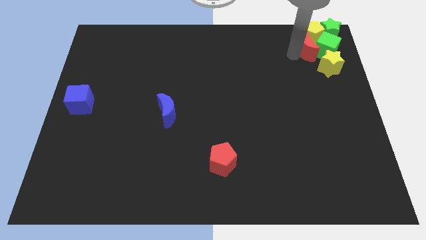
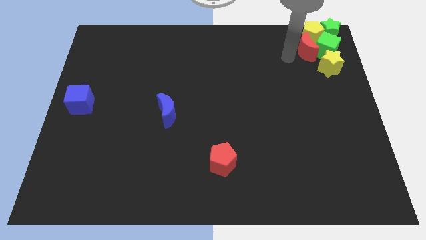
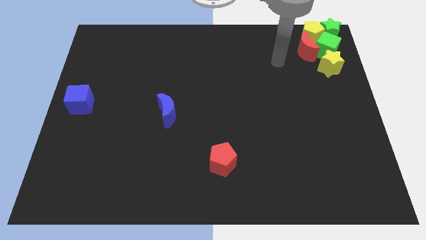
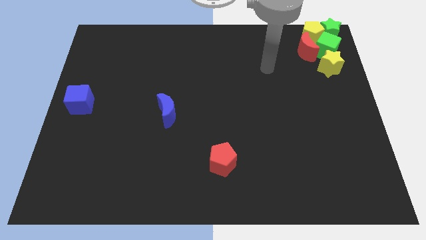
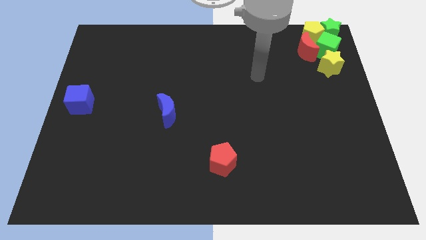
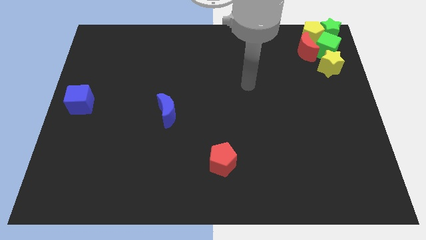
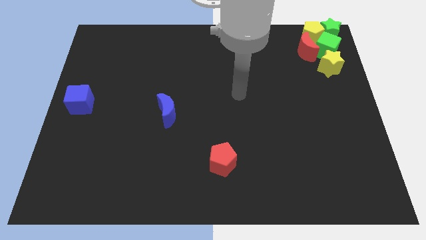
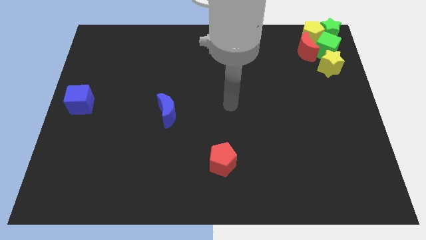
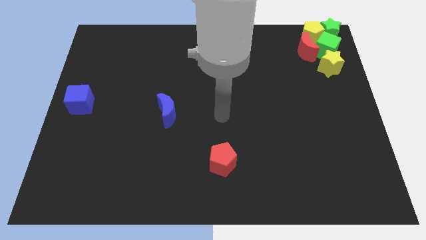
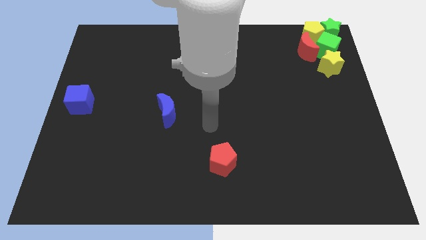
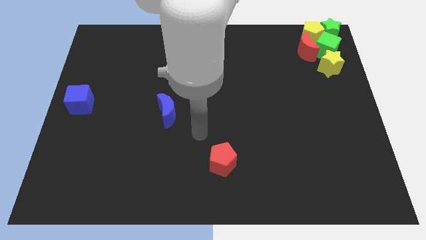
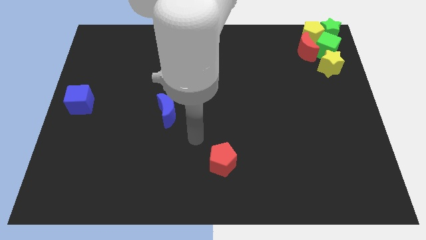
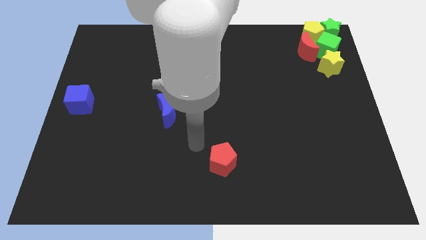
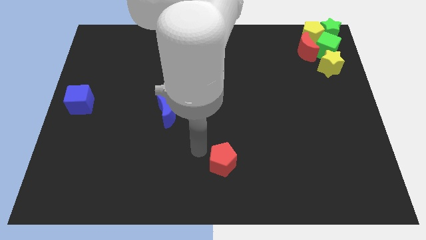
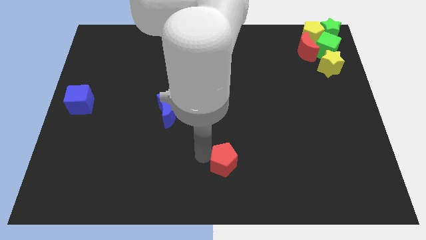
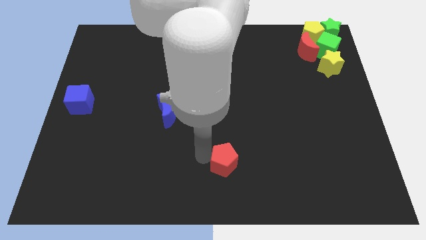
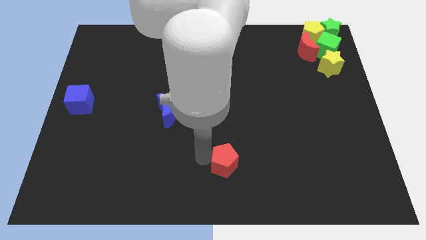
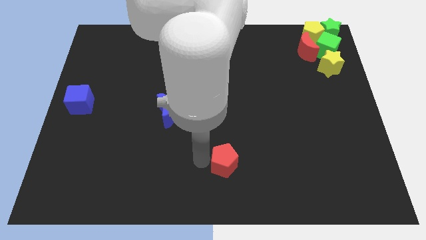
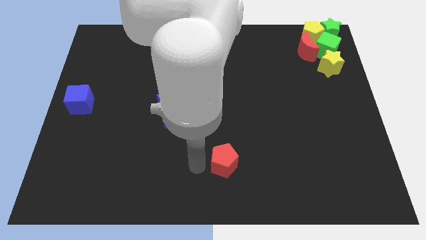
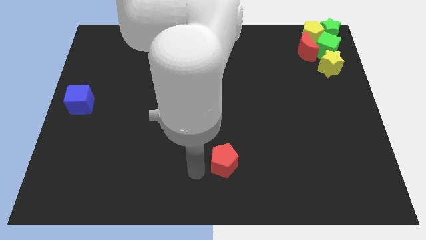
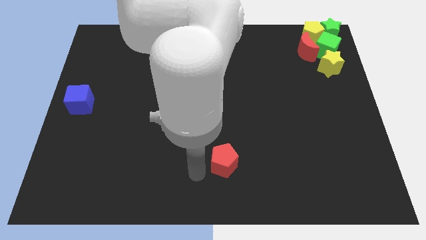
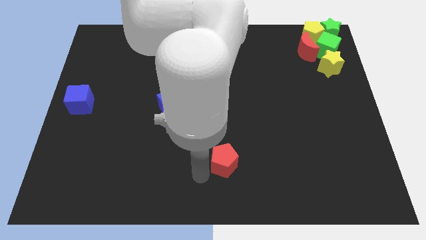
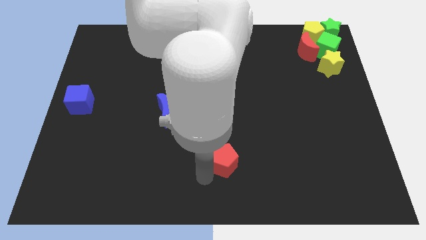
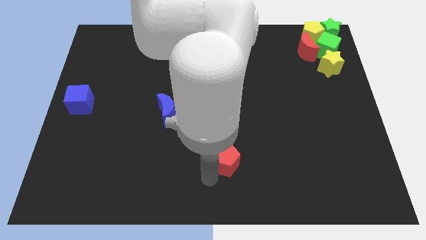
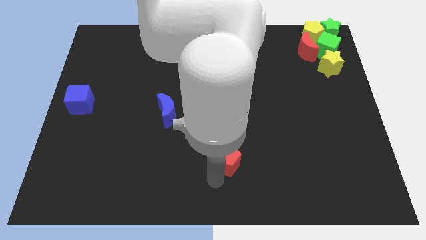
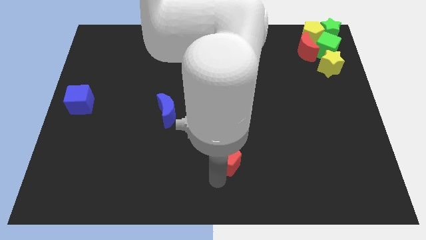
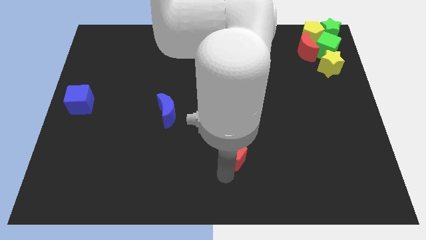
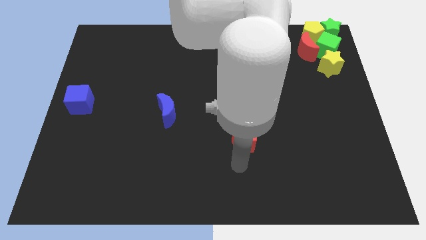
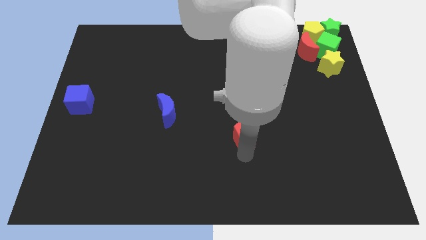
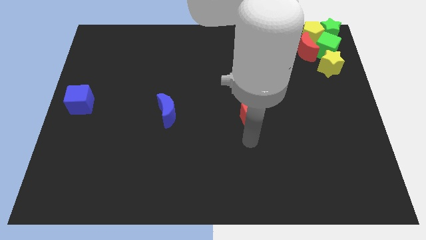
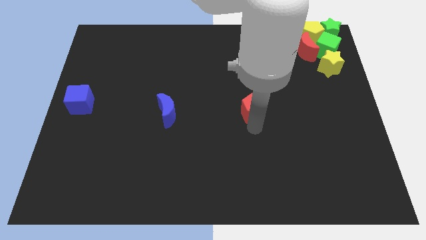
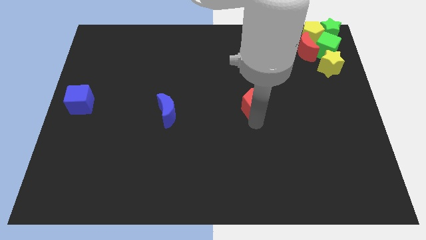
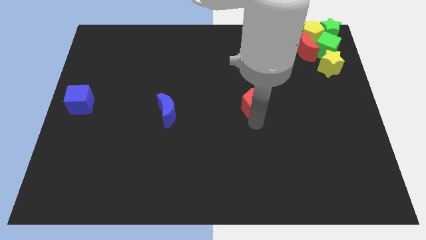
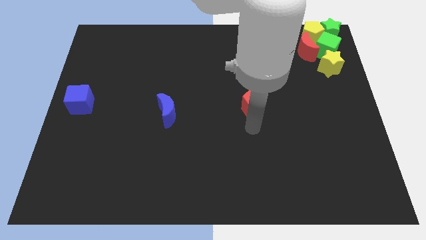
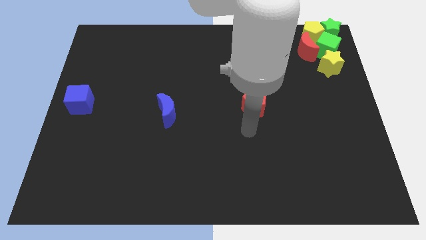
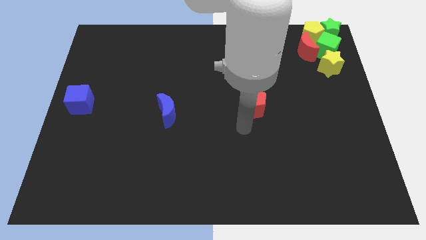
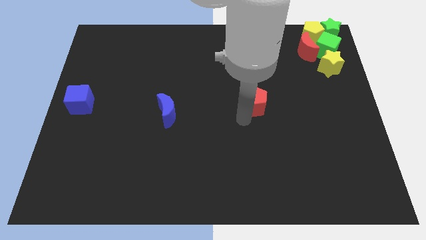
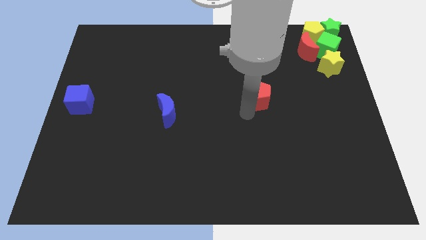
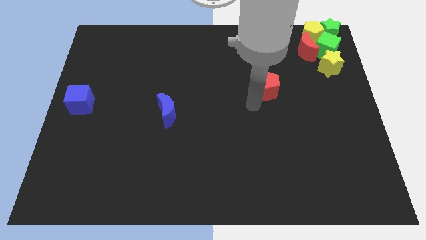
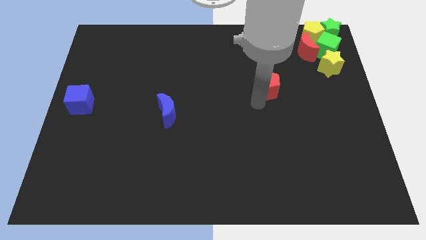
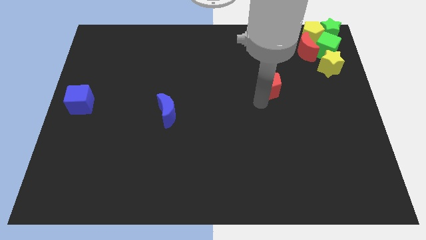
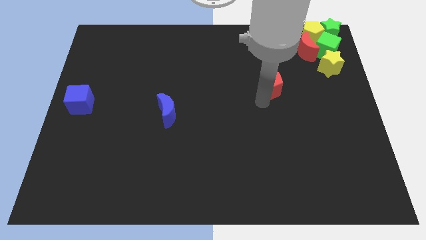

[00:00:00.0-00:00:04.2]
push the red pentagon upward

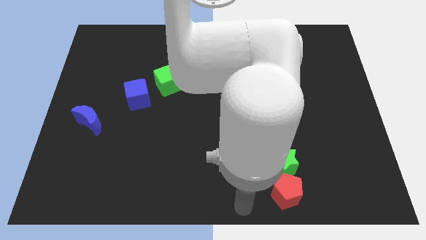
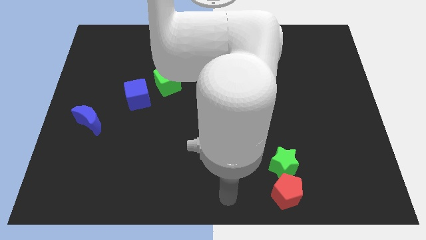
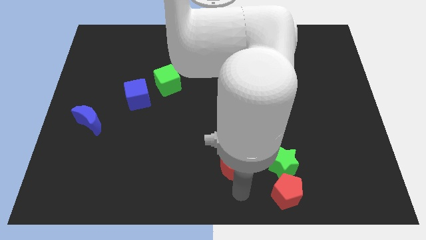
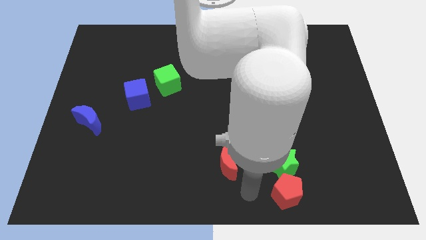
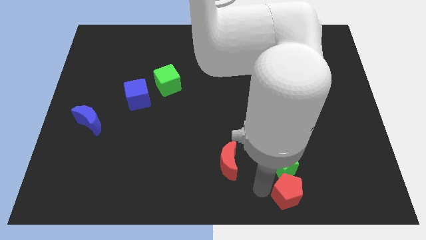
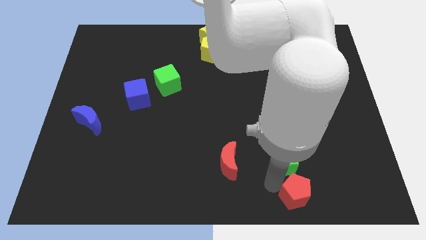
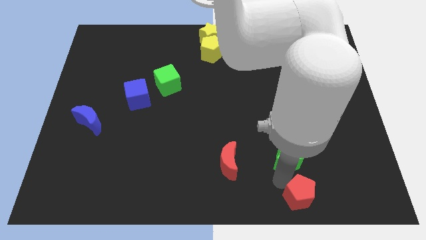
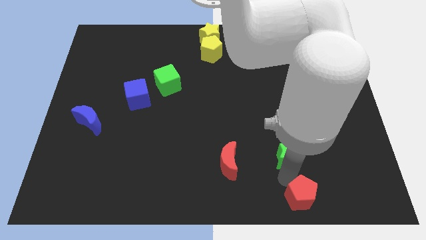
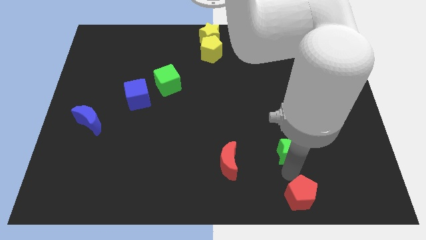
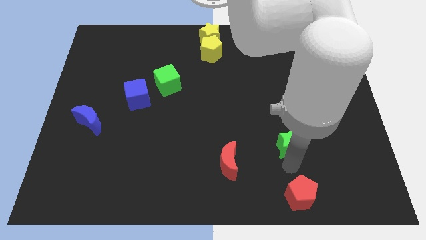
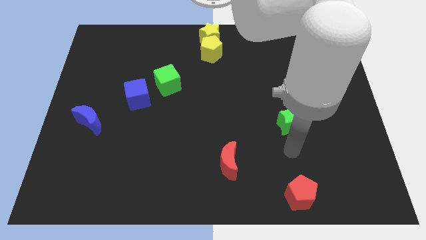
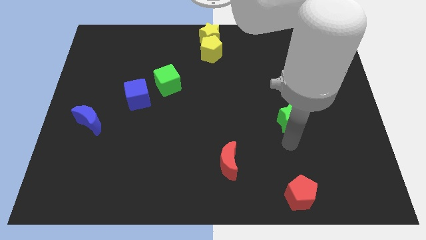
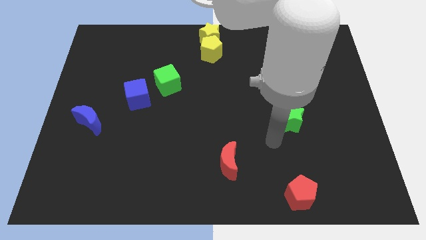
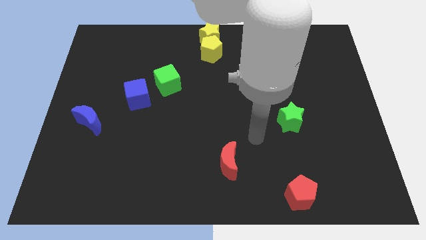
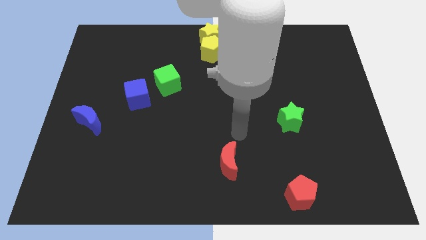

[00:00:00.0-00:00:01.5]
separate the green star from the red pentagon

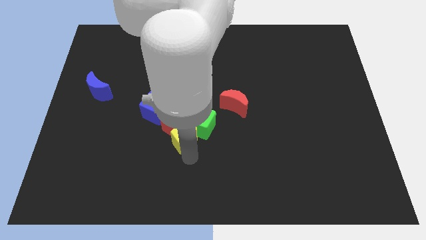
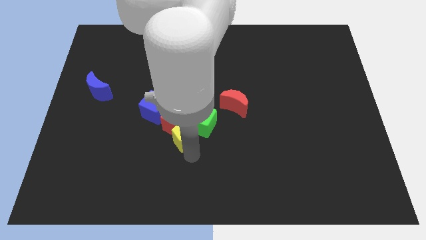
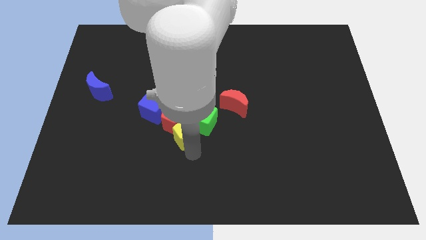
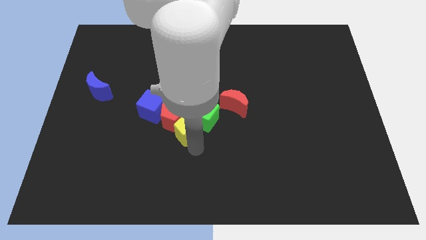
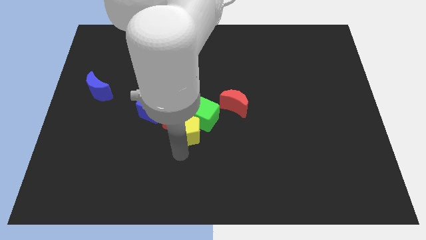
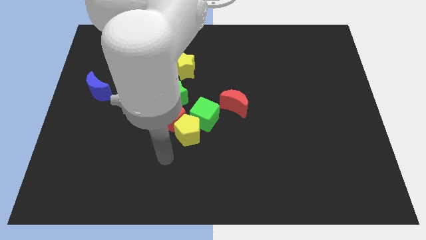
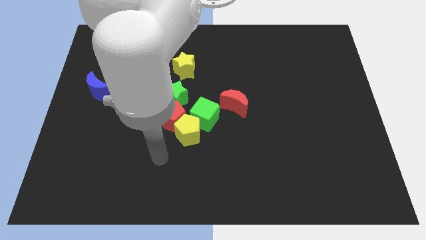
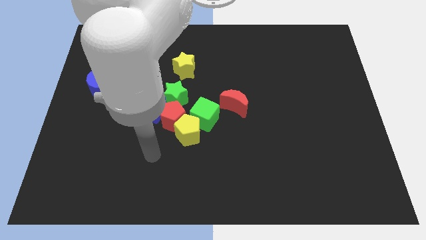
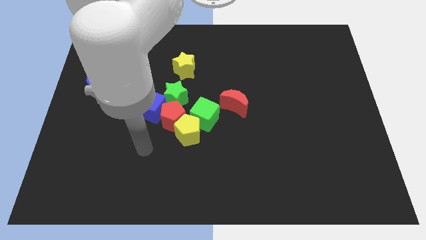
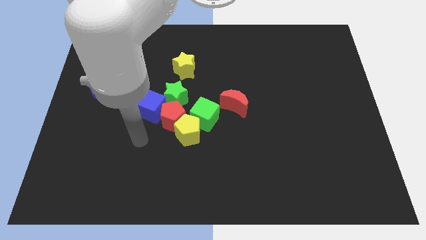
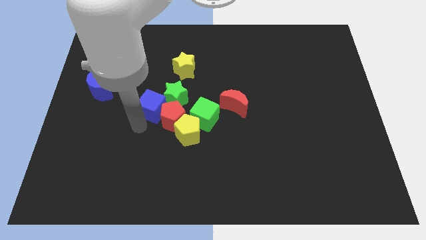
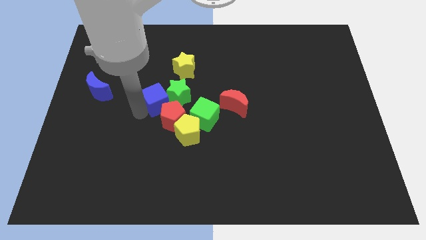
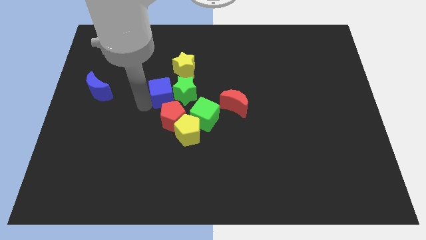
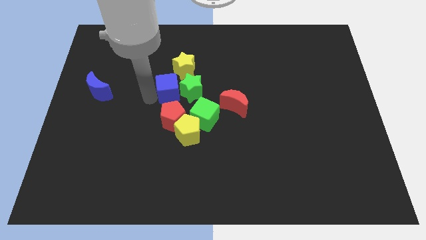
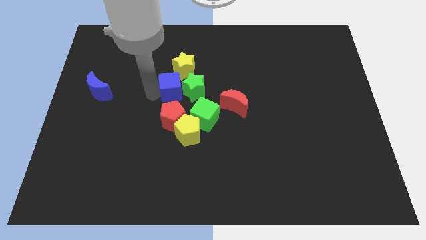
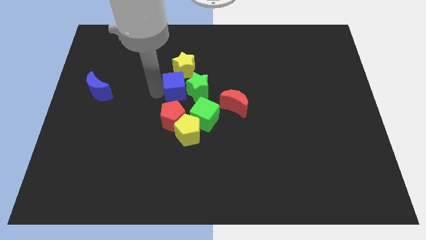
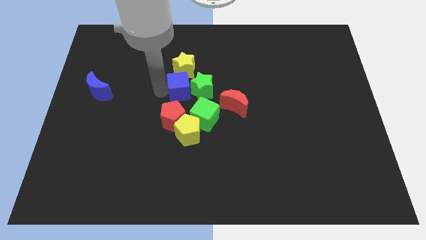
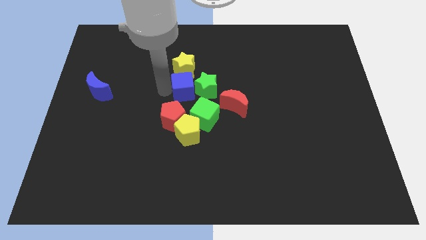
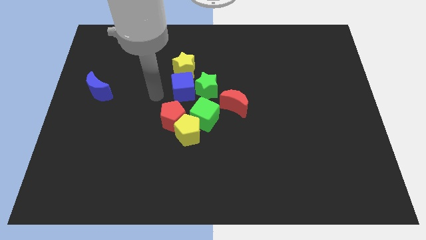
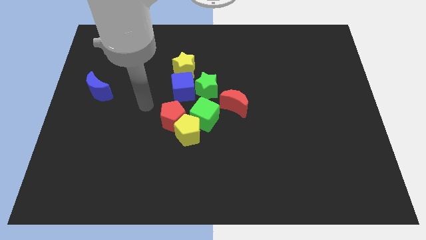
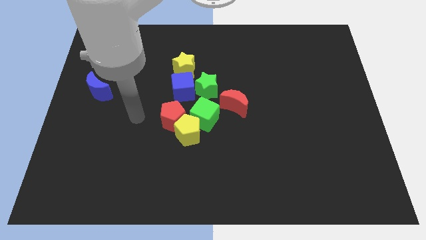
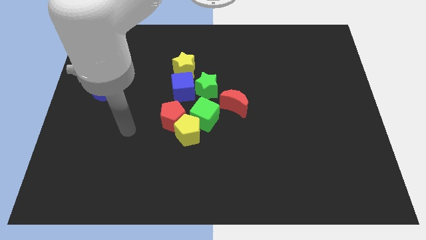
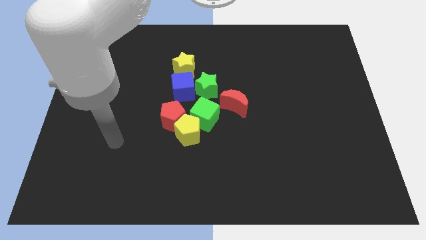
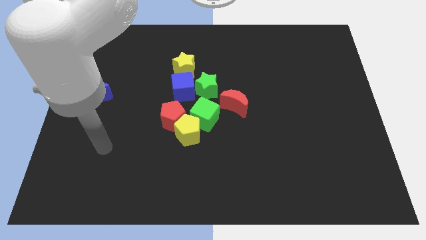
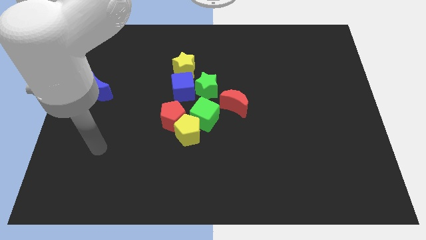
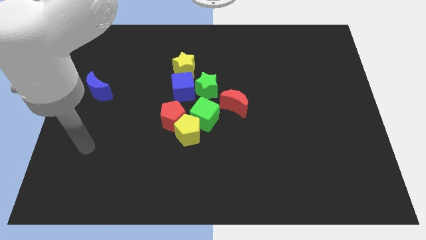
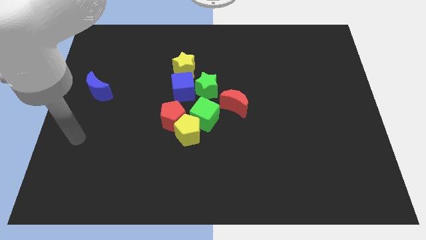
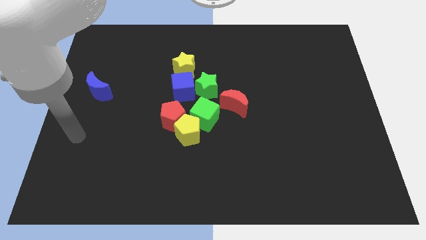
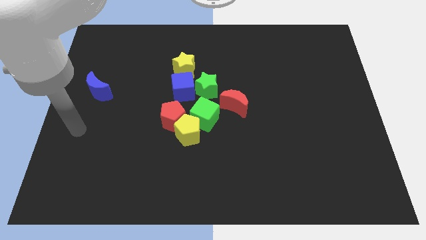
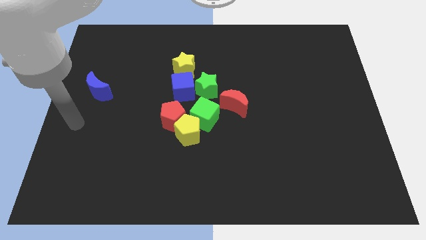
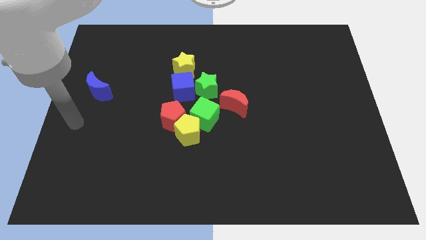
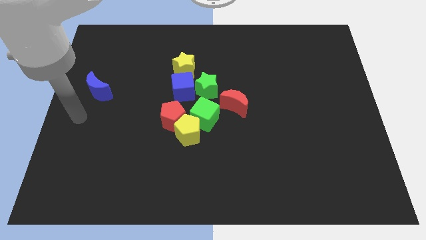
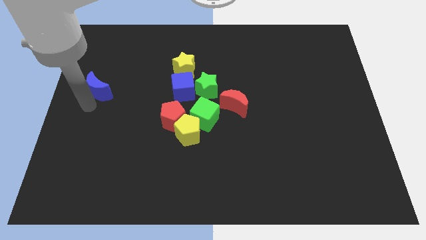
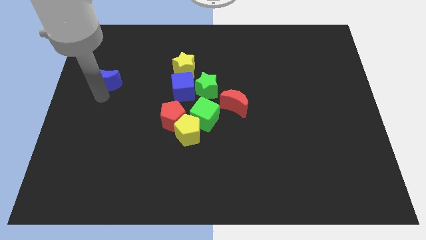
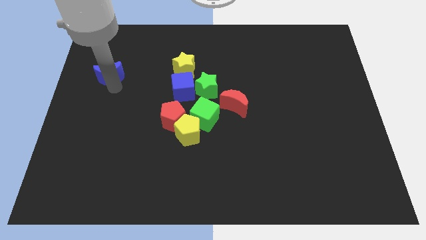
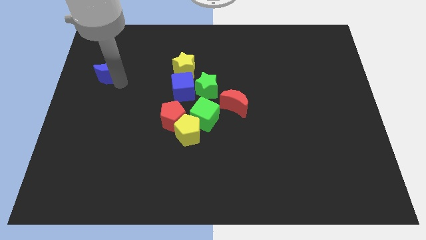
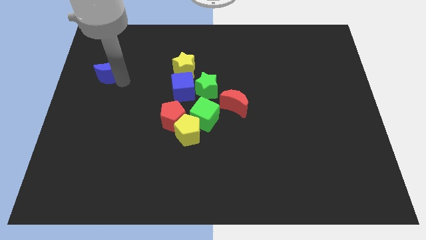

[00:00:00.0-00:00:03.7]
push the blue cube into the green star
